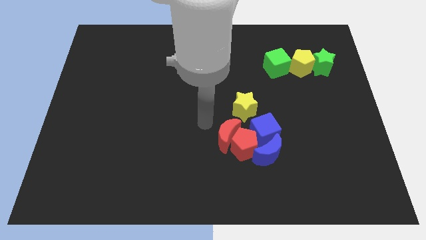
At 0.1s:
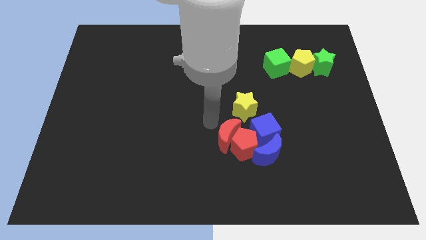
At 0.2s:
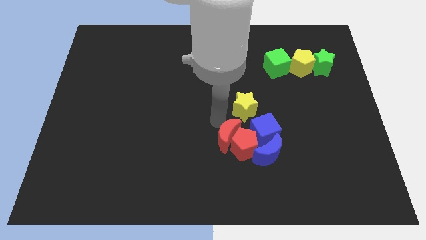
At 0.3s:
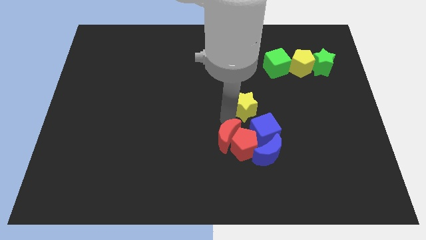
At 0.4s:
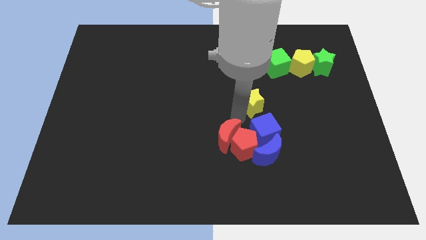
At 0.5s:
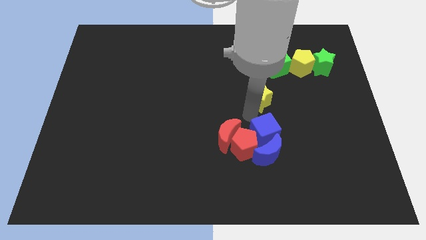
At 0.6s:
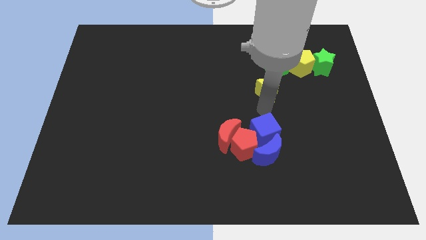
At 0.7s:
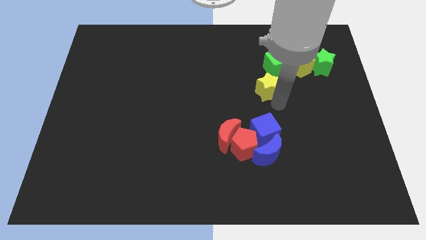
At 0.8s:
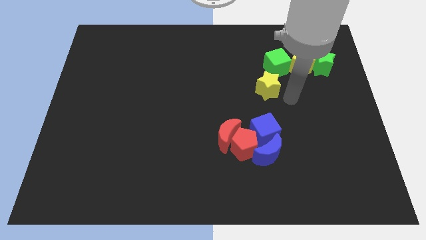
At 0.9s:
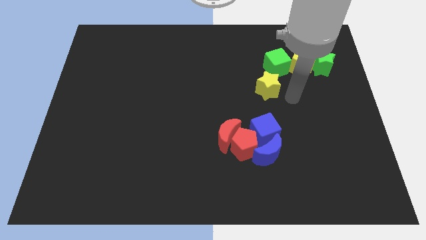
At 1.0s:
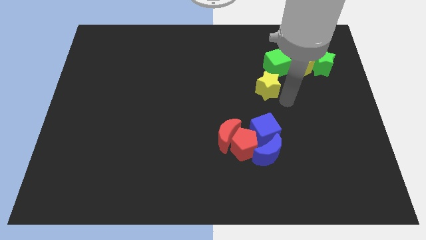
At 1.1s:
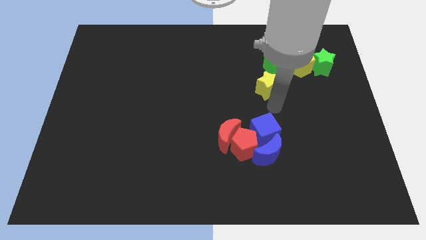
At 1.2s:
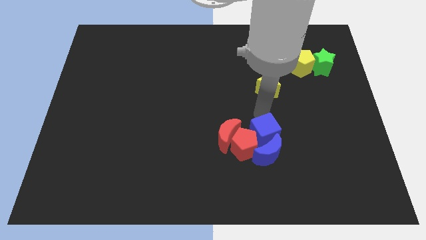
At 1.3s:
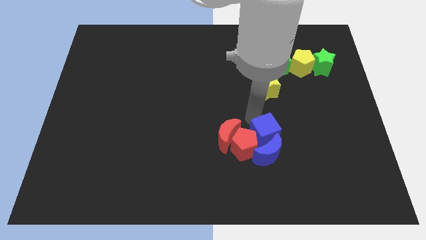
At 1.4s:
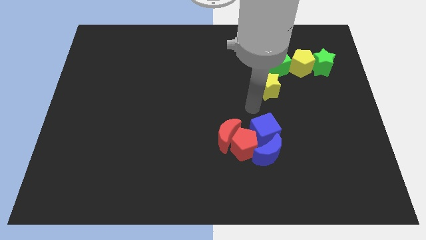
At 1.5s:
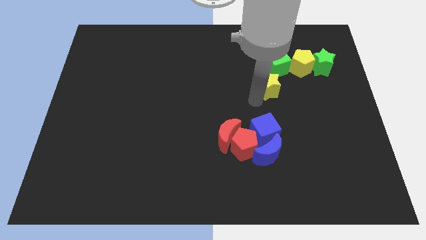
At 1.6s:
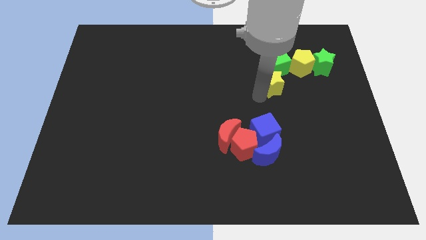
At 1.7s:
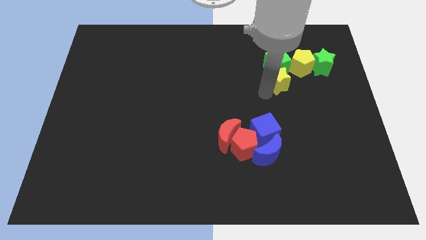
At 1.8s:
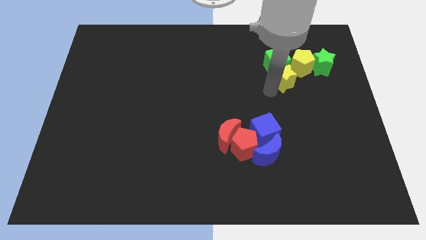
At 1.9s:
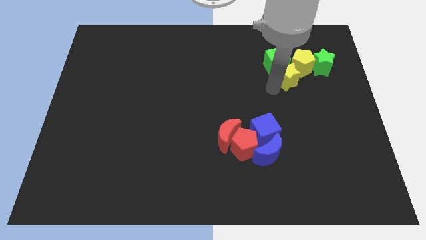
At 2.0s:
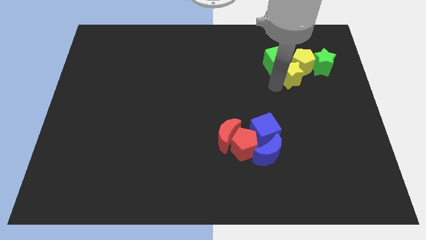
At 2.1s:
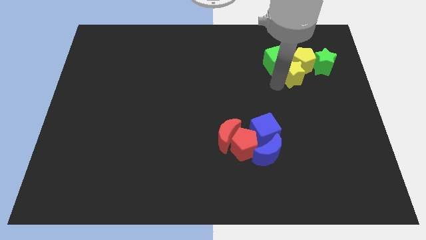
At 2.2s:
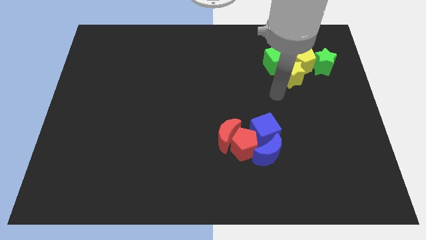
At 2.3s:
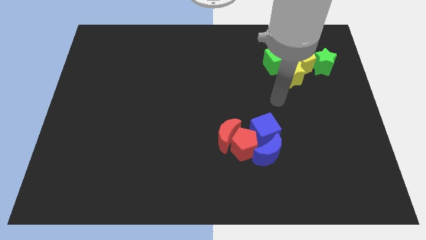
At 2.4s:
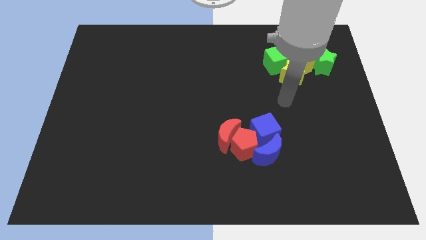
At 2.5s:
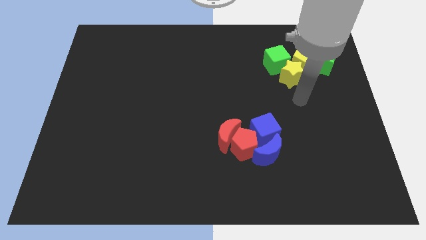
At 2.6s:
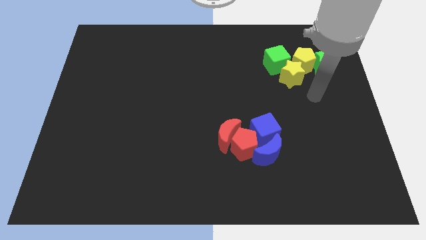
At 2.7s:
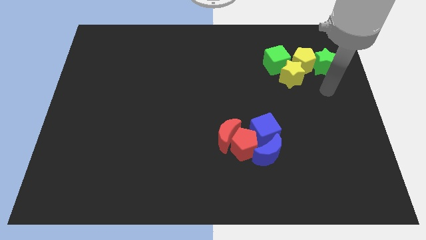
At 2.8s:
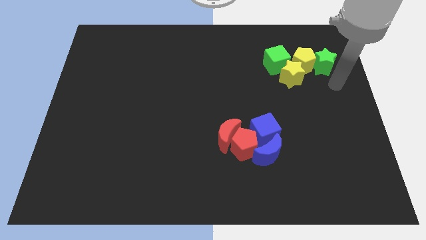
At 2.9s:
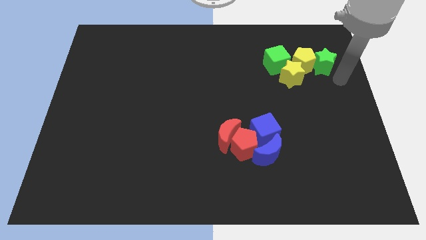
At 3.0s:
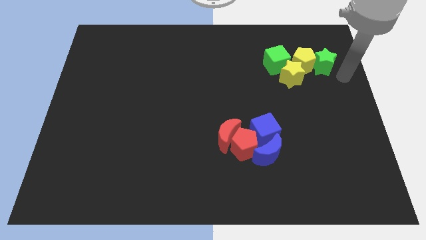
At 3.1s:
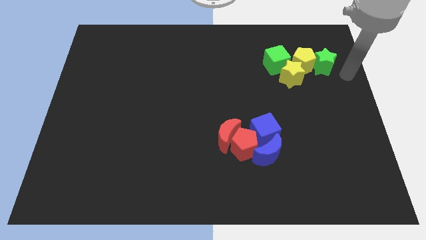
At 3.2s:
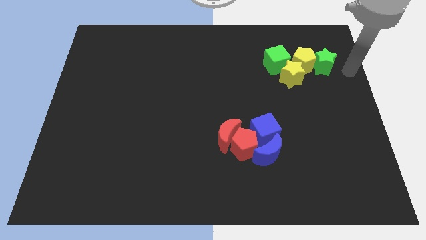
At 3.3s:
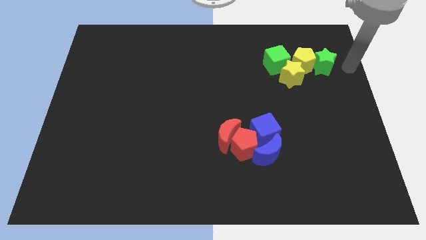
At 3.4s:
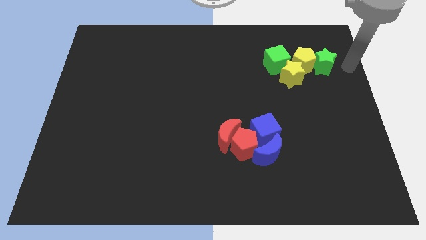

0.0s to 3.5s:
push the yellow star into the yellow pentagon

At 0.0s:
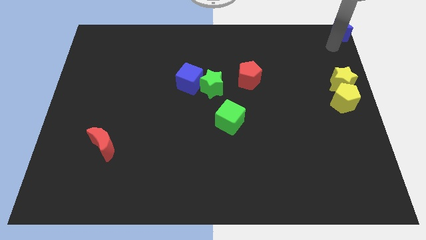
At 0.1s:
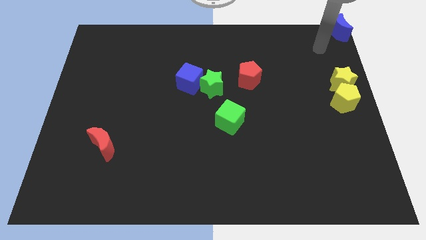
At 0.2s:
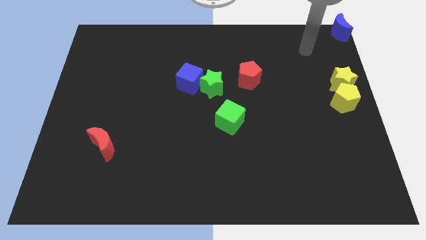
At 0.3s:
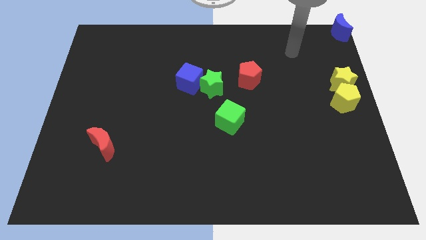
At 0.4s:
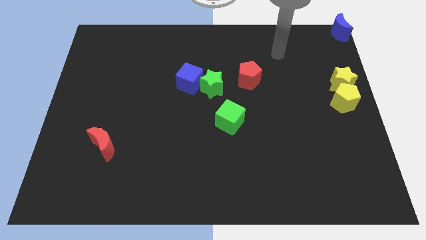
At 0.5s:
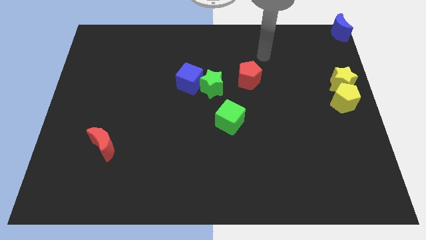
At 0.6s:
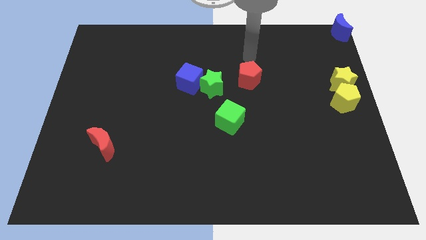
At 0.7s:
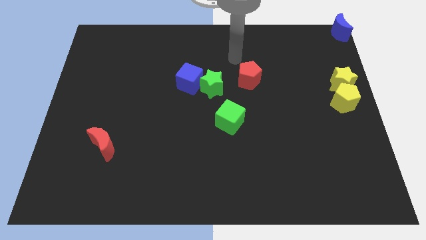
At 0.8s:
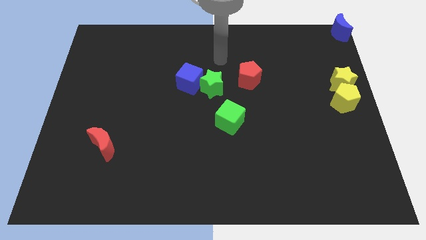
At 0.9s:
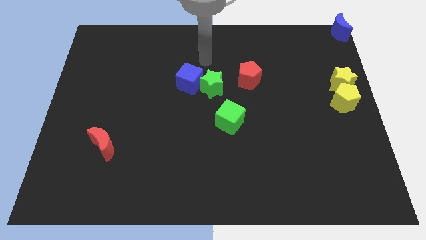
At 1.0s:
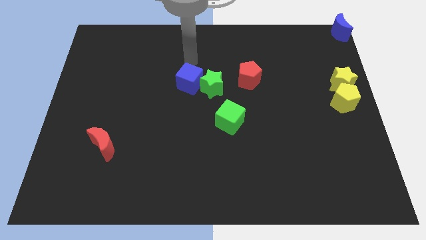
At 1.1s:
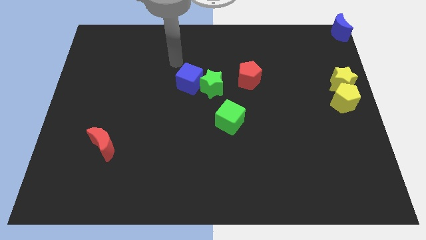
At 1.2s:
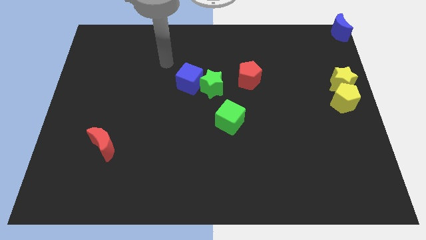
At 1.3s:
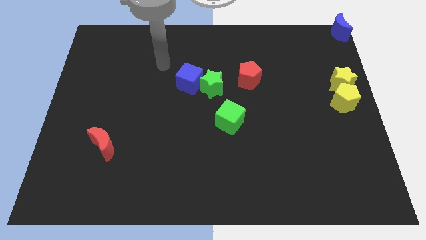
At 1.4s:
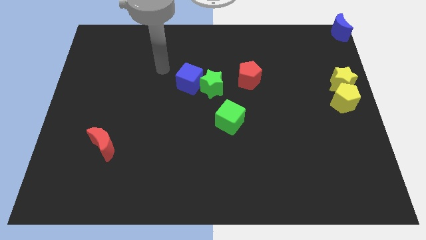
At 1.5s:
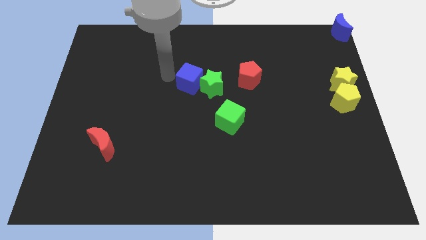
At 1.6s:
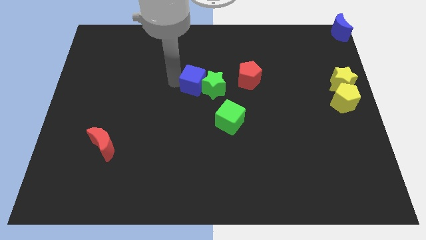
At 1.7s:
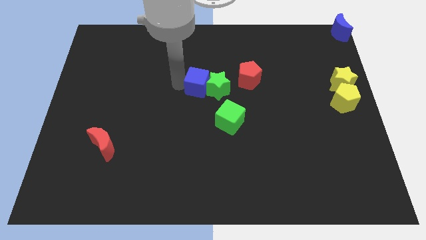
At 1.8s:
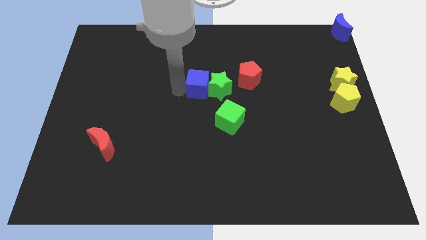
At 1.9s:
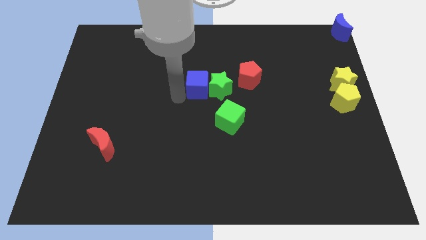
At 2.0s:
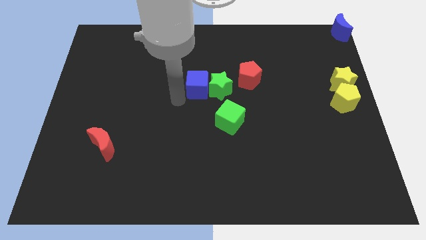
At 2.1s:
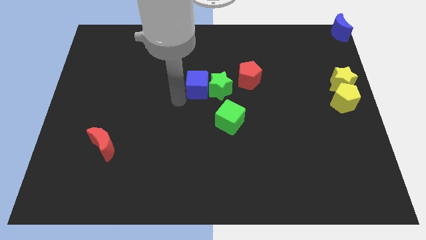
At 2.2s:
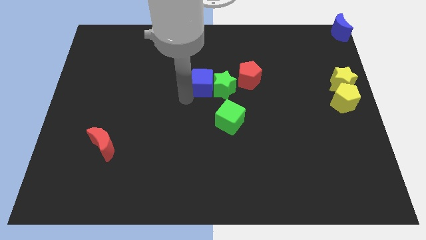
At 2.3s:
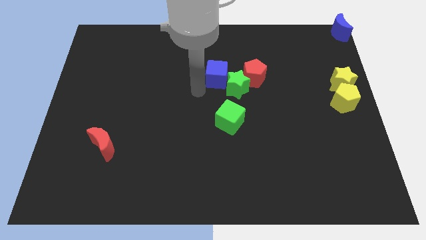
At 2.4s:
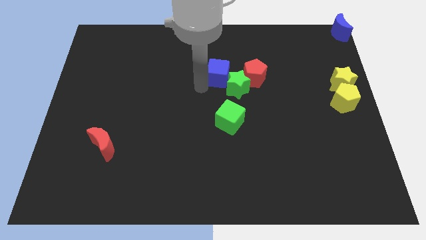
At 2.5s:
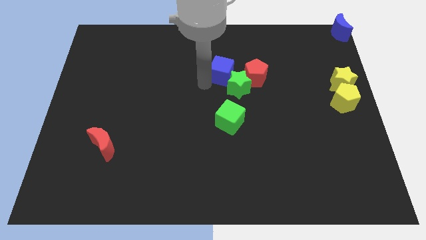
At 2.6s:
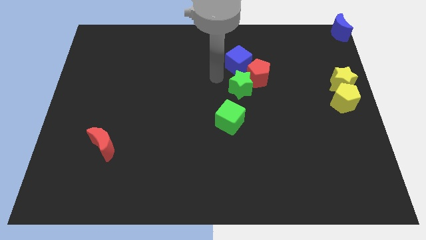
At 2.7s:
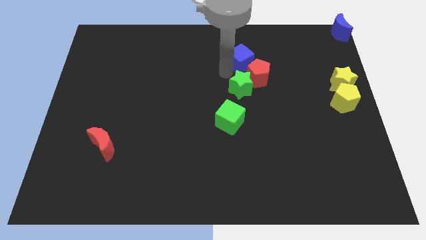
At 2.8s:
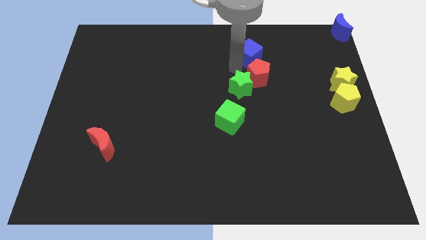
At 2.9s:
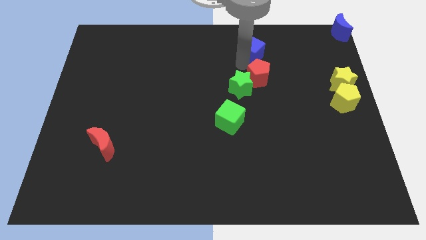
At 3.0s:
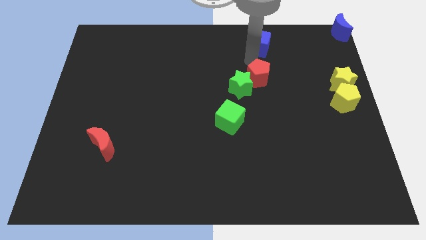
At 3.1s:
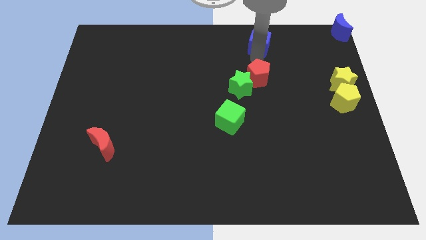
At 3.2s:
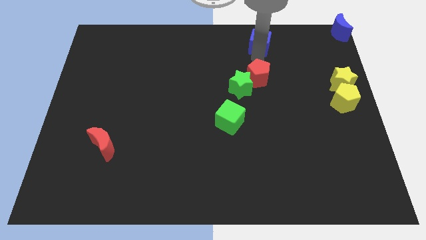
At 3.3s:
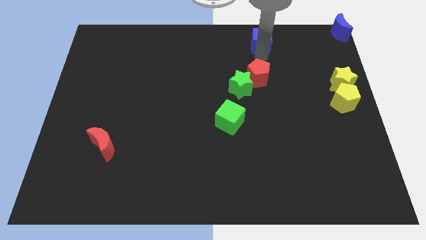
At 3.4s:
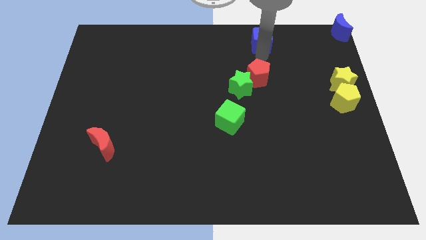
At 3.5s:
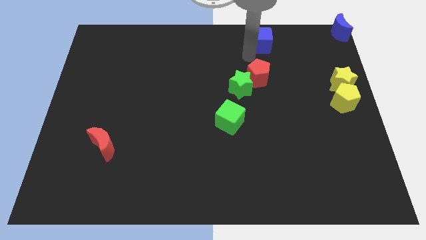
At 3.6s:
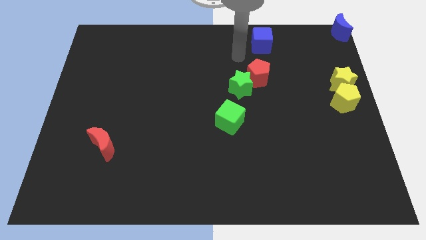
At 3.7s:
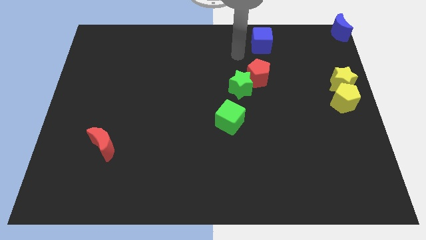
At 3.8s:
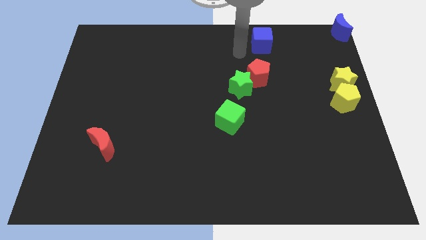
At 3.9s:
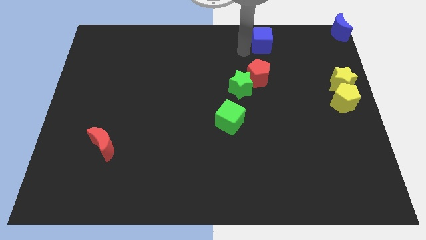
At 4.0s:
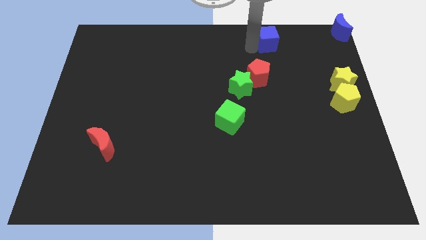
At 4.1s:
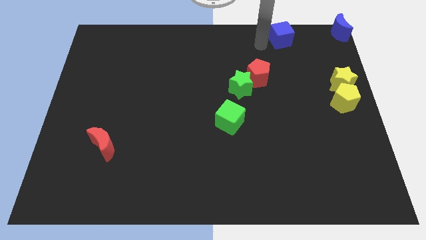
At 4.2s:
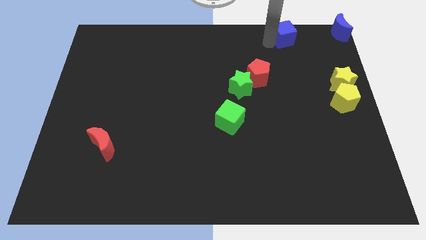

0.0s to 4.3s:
push the blue cube to the top right of the red pentagon

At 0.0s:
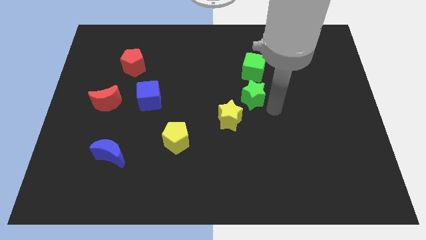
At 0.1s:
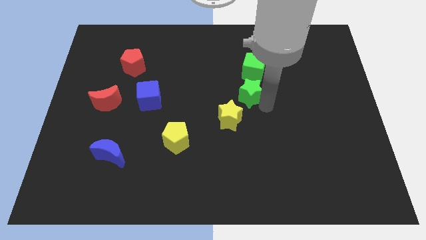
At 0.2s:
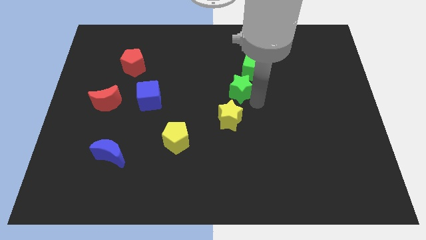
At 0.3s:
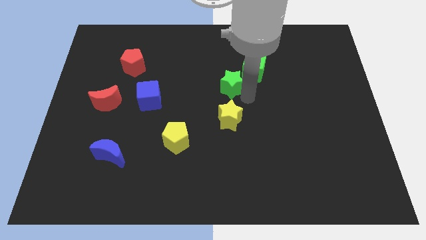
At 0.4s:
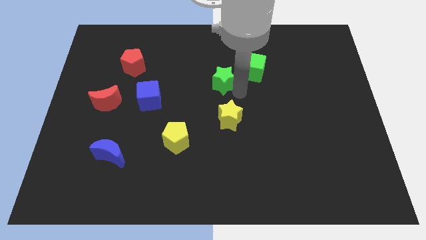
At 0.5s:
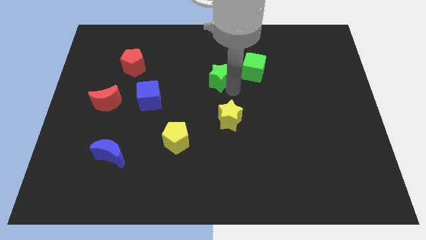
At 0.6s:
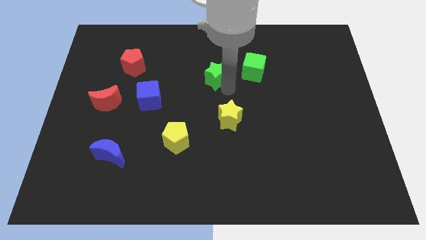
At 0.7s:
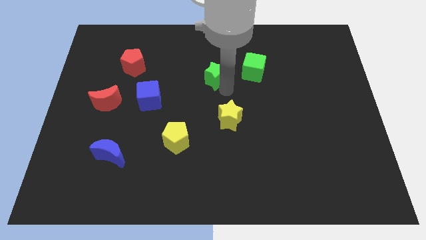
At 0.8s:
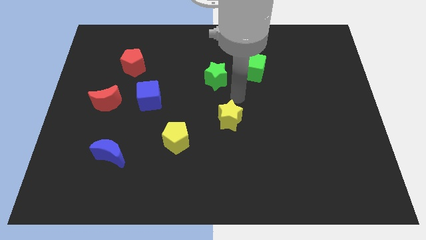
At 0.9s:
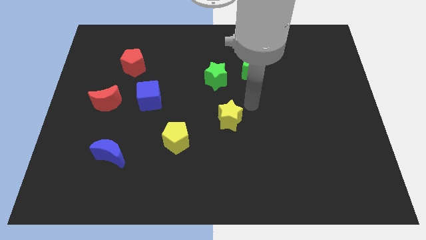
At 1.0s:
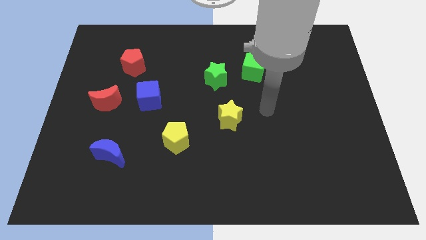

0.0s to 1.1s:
push the green star to the left of the green cube

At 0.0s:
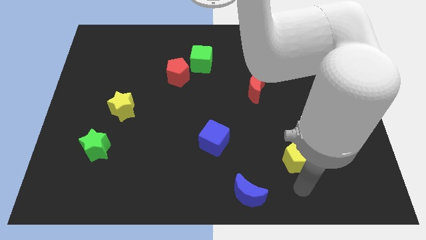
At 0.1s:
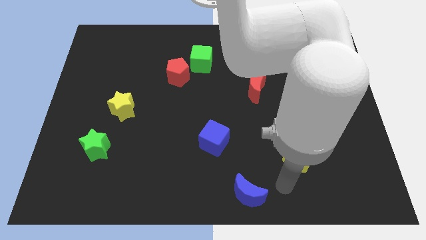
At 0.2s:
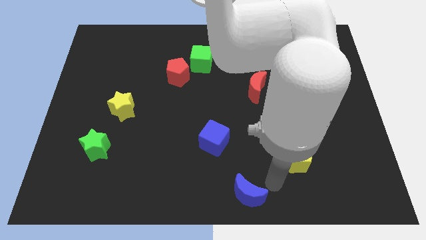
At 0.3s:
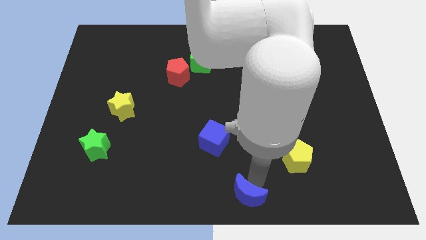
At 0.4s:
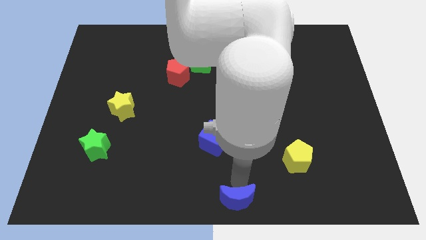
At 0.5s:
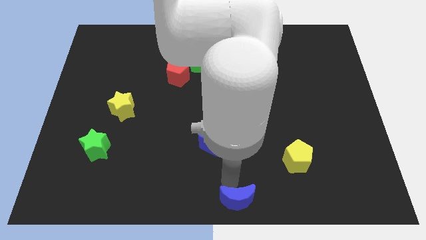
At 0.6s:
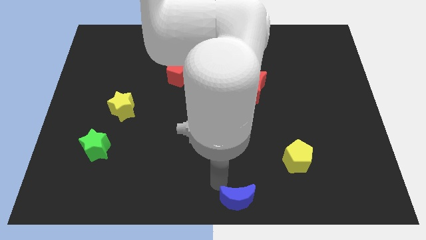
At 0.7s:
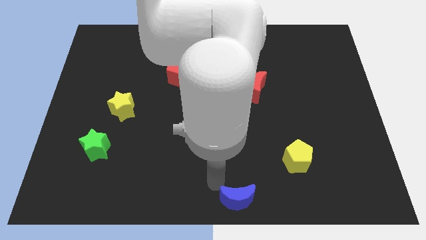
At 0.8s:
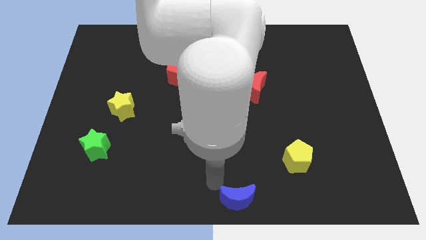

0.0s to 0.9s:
point your arm above blue moon
